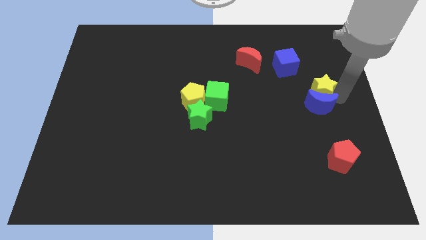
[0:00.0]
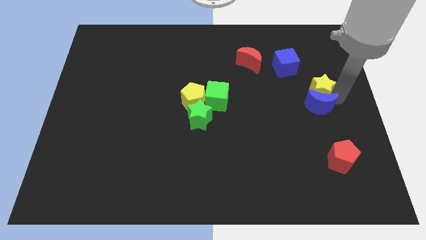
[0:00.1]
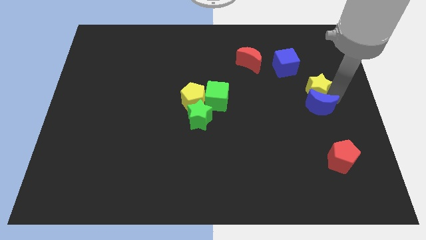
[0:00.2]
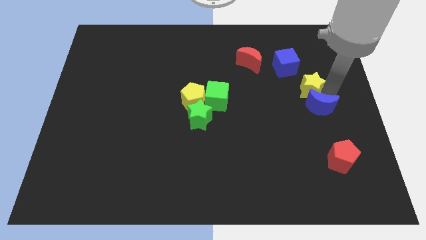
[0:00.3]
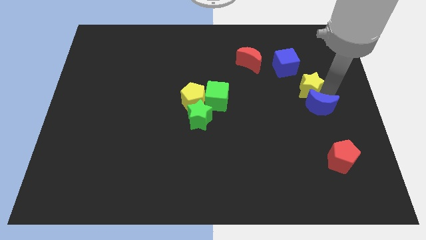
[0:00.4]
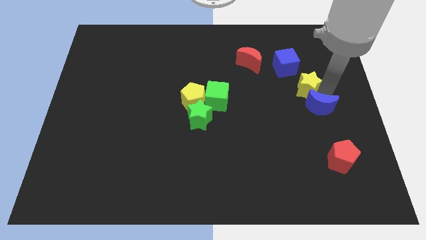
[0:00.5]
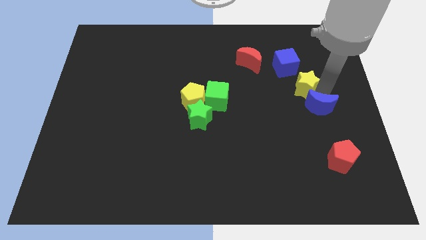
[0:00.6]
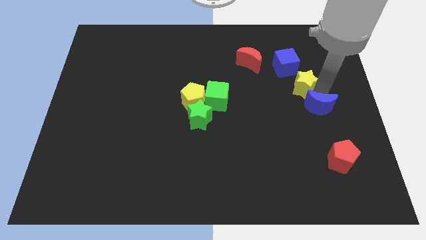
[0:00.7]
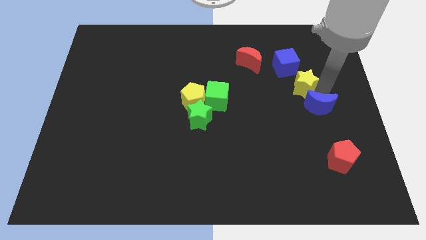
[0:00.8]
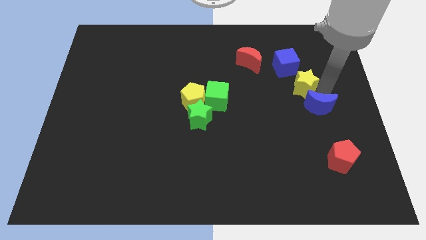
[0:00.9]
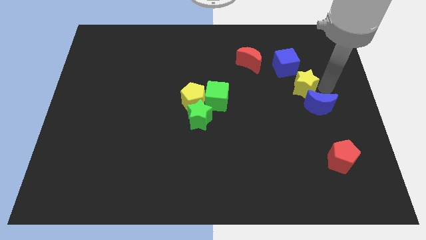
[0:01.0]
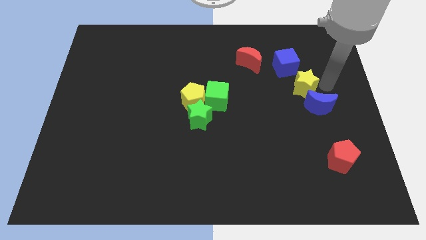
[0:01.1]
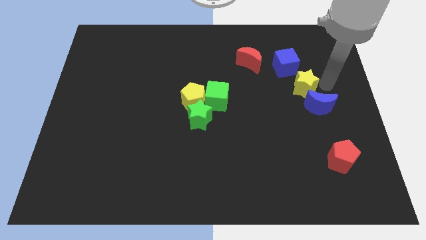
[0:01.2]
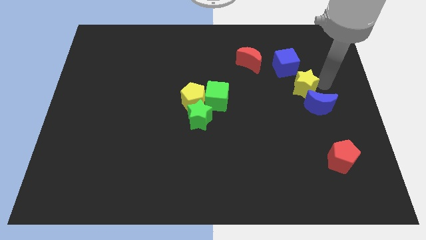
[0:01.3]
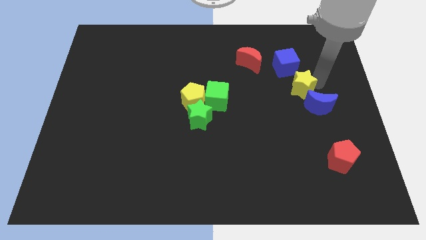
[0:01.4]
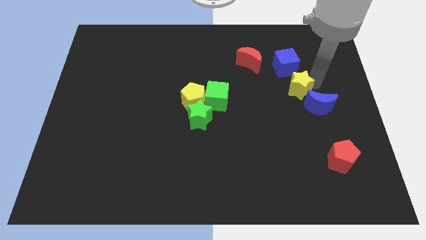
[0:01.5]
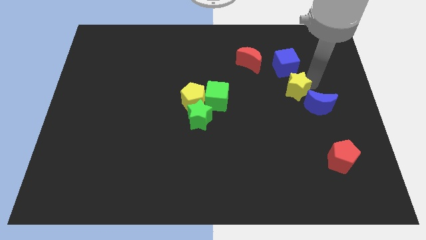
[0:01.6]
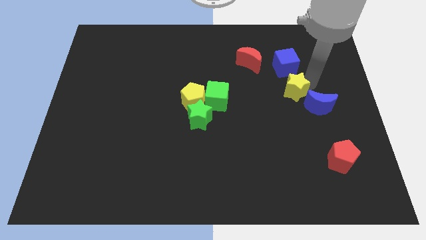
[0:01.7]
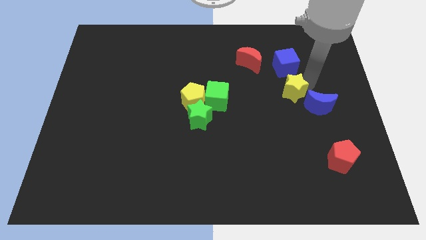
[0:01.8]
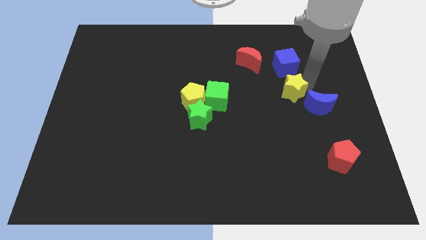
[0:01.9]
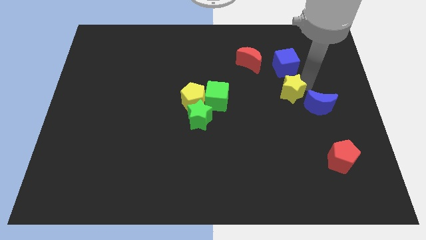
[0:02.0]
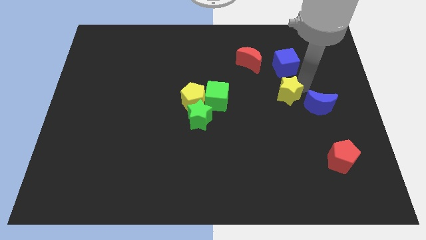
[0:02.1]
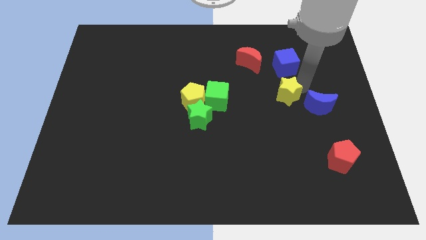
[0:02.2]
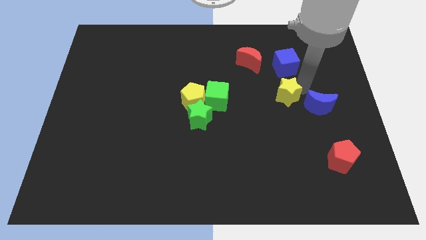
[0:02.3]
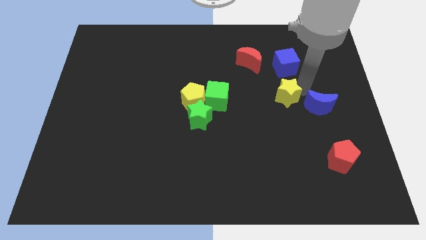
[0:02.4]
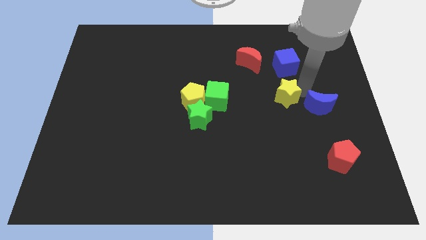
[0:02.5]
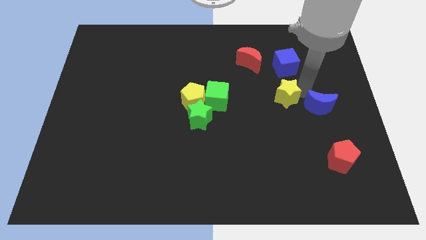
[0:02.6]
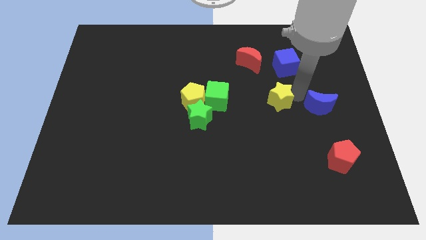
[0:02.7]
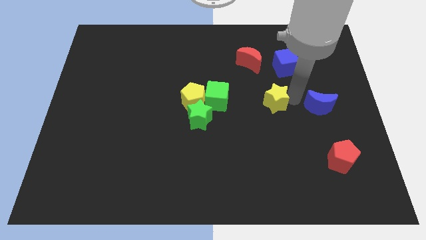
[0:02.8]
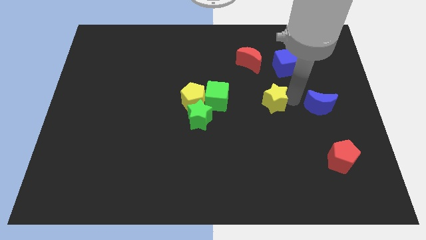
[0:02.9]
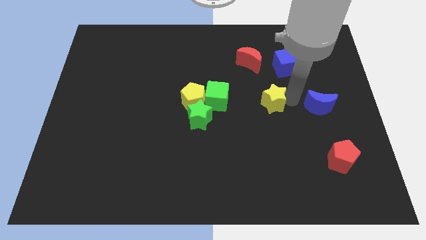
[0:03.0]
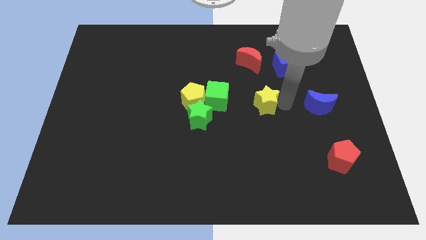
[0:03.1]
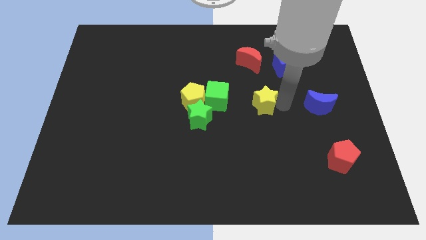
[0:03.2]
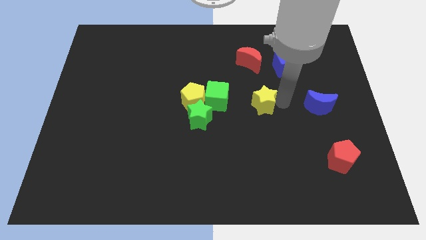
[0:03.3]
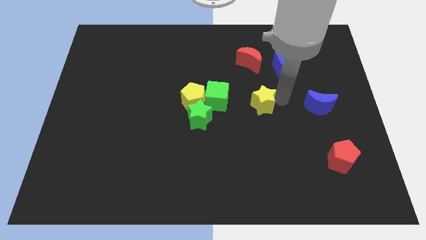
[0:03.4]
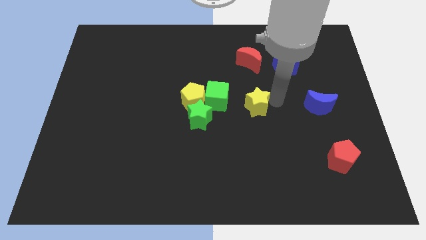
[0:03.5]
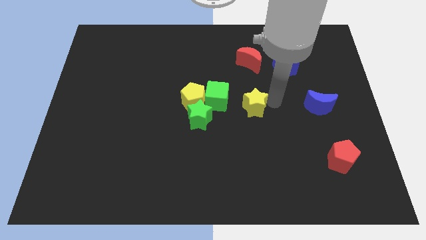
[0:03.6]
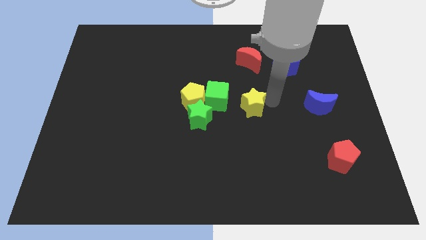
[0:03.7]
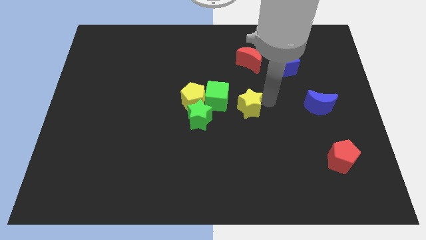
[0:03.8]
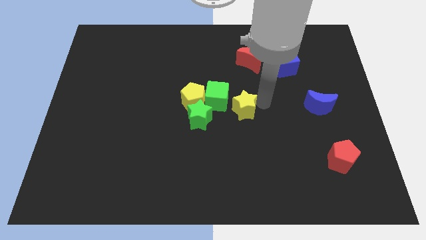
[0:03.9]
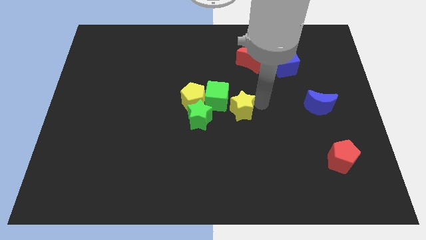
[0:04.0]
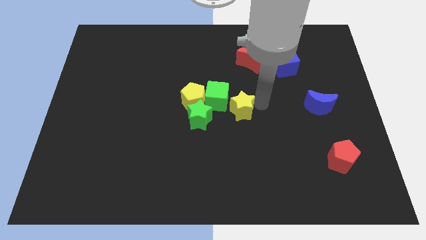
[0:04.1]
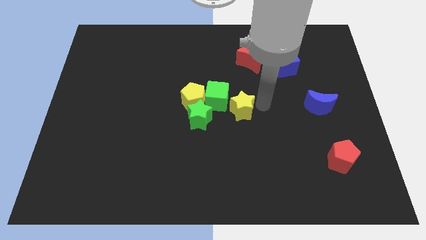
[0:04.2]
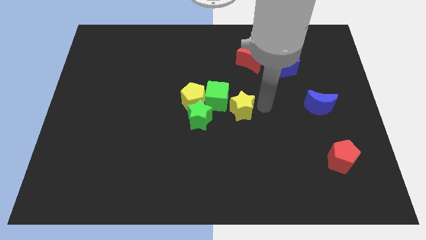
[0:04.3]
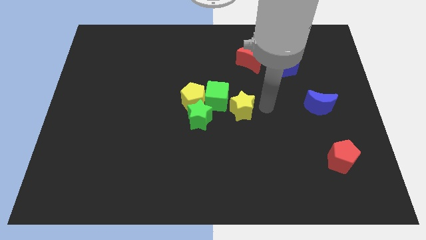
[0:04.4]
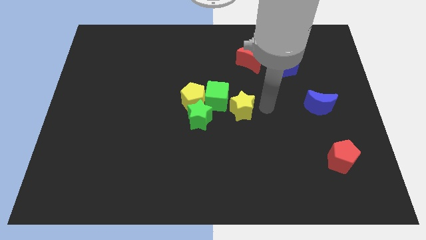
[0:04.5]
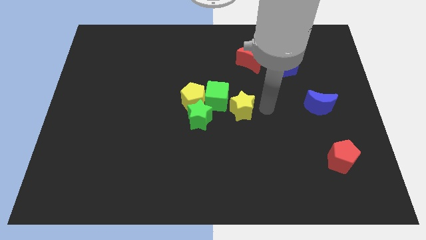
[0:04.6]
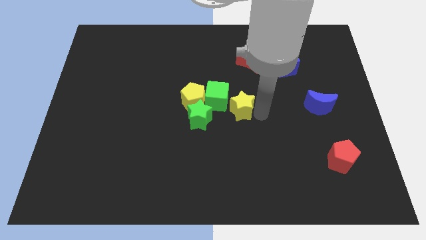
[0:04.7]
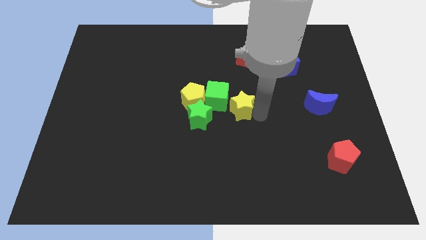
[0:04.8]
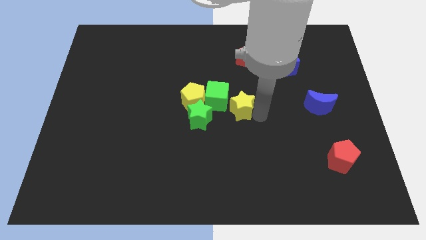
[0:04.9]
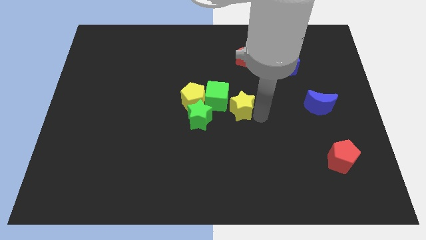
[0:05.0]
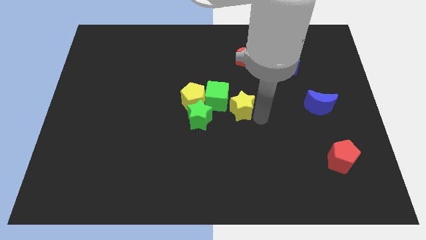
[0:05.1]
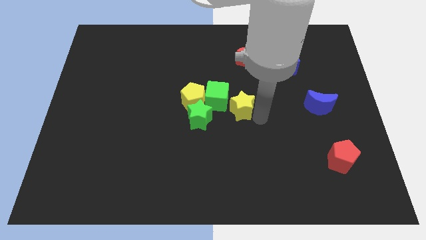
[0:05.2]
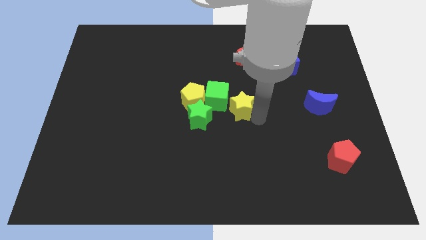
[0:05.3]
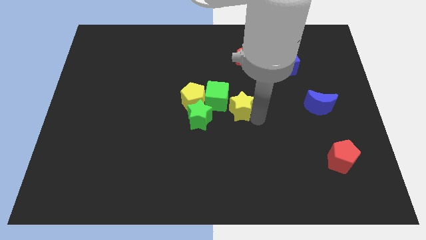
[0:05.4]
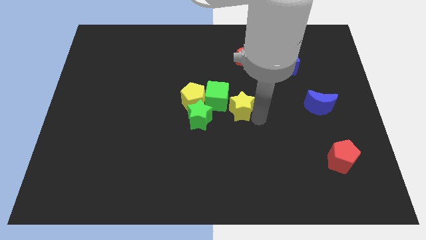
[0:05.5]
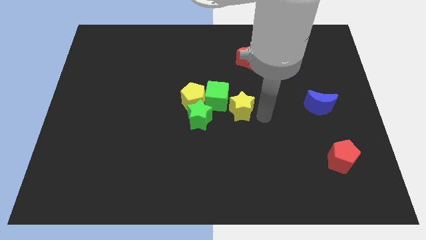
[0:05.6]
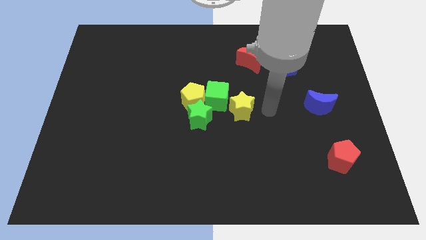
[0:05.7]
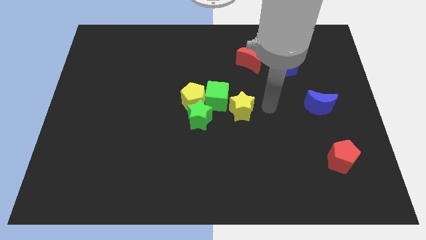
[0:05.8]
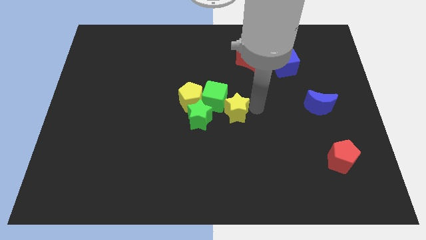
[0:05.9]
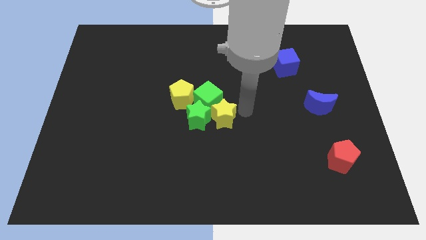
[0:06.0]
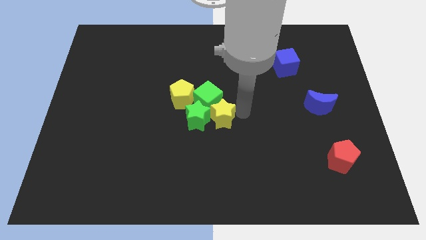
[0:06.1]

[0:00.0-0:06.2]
push the yellow star into the green star

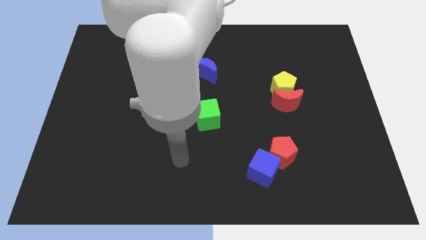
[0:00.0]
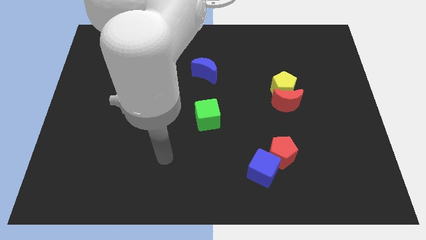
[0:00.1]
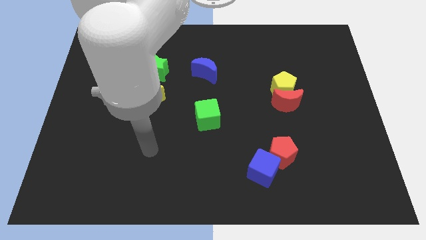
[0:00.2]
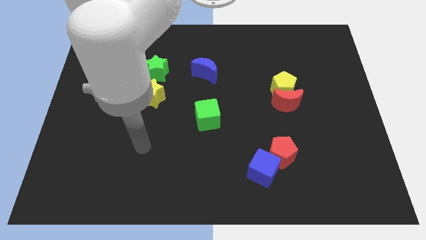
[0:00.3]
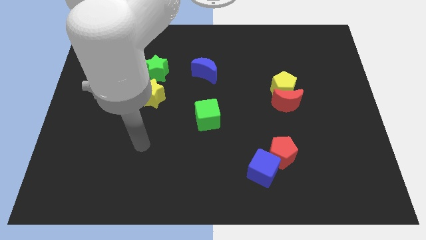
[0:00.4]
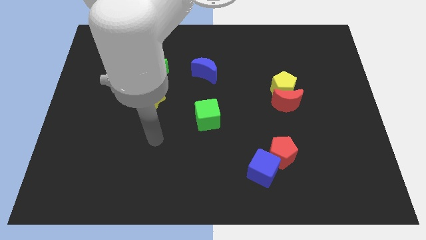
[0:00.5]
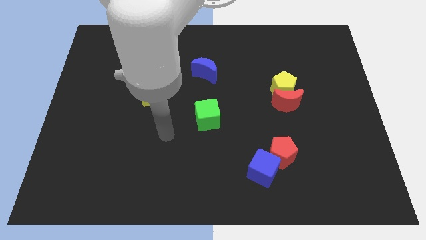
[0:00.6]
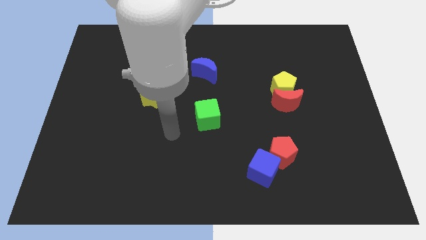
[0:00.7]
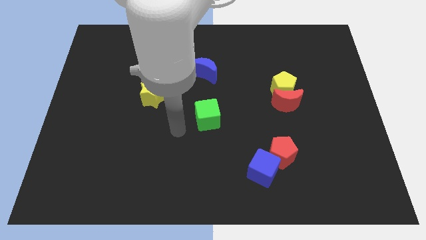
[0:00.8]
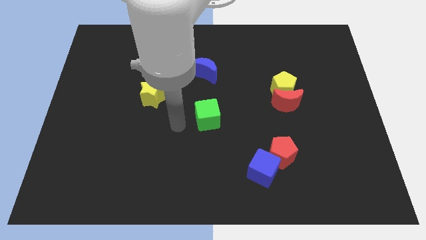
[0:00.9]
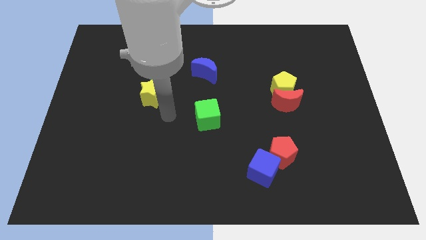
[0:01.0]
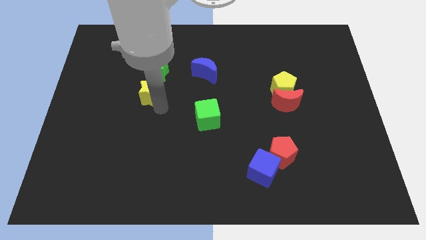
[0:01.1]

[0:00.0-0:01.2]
touch the bottom of the yellow star

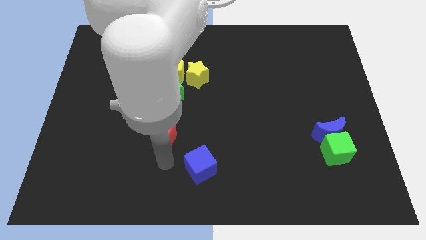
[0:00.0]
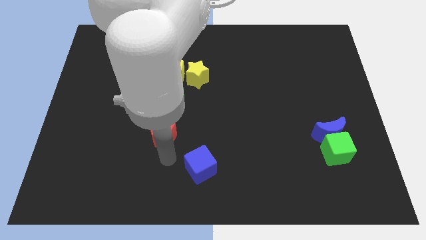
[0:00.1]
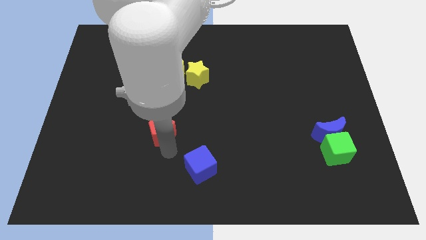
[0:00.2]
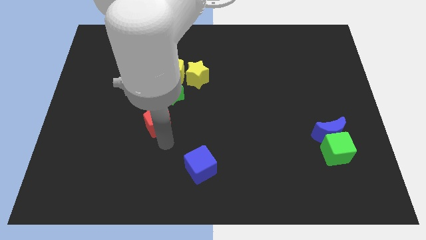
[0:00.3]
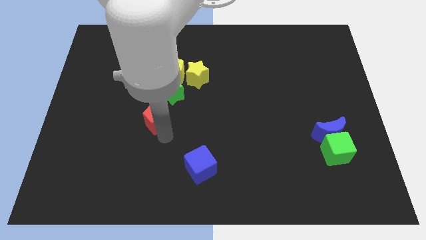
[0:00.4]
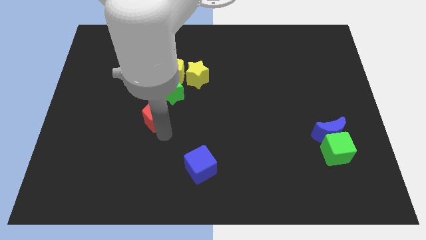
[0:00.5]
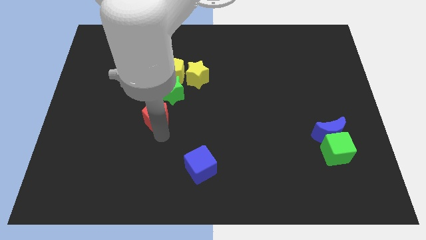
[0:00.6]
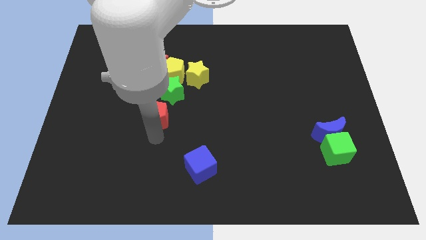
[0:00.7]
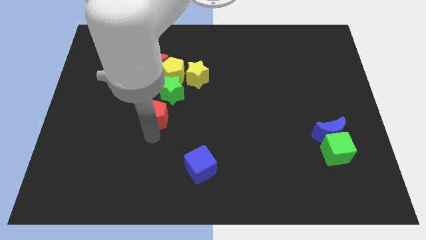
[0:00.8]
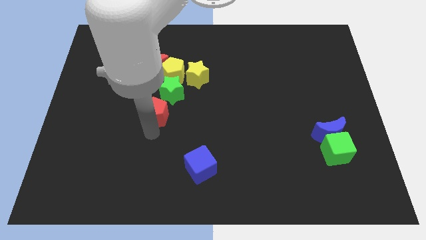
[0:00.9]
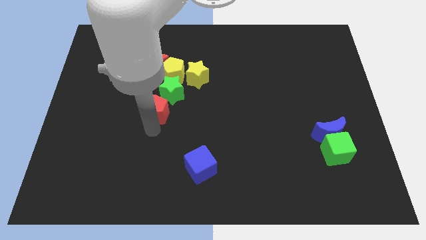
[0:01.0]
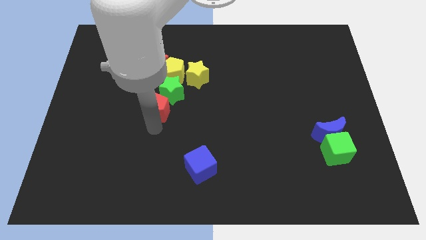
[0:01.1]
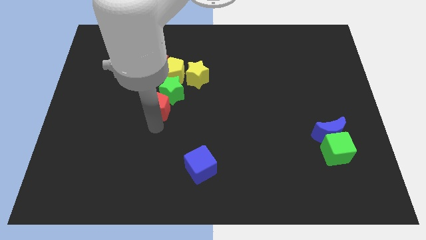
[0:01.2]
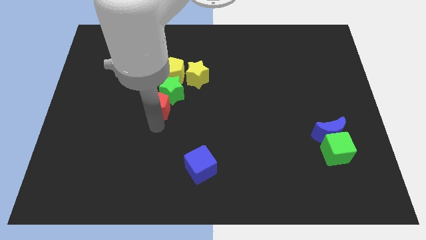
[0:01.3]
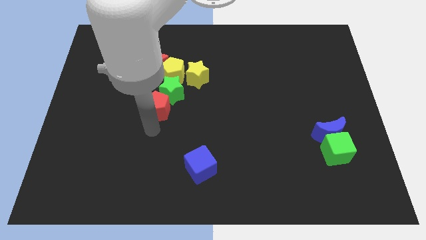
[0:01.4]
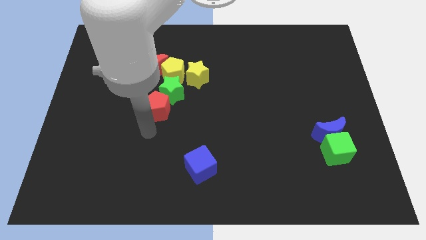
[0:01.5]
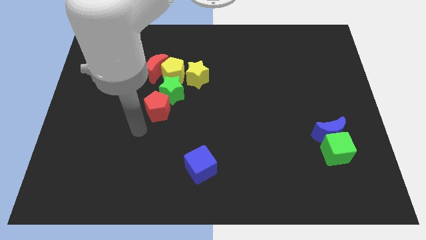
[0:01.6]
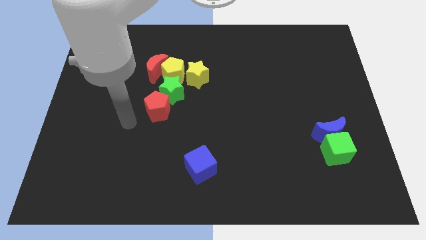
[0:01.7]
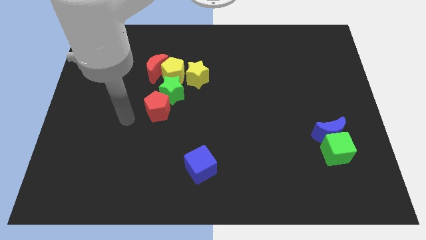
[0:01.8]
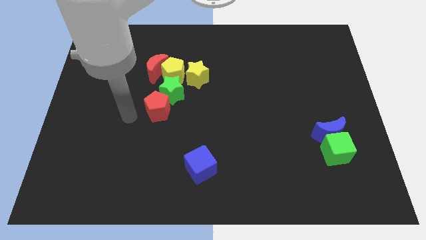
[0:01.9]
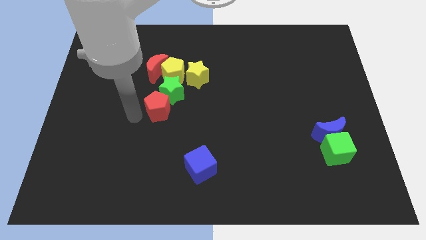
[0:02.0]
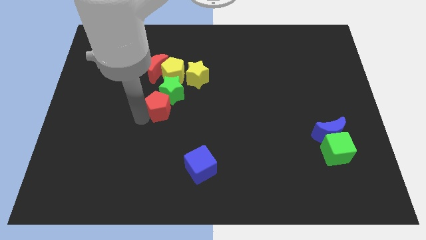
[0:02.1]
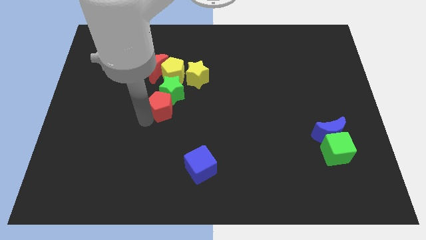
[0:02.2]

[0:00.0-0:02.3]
move the red pentagon to the bottom left side of the green star
